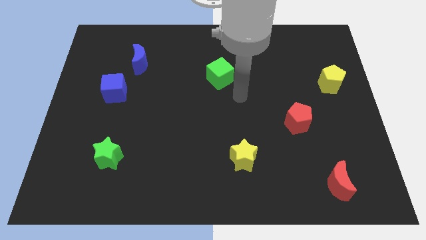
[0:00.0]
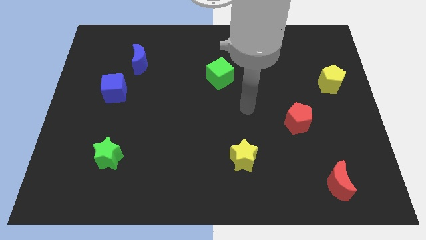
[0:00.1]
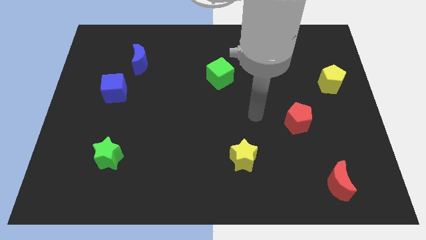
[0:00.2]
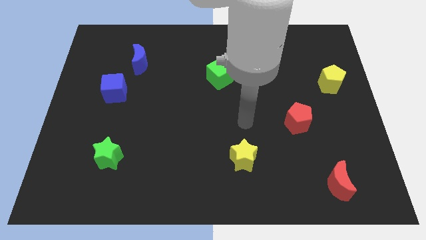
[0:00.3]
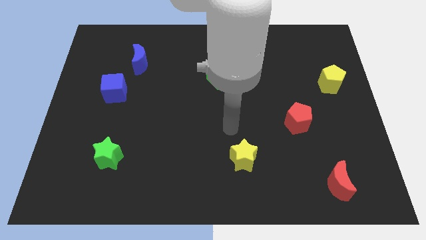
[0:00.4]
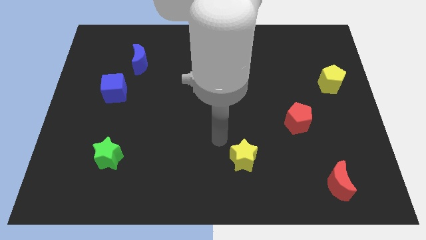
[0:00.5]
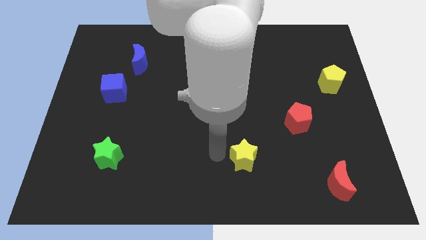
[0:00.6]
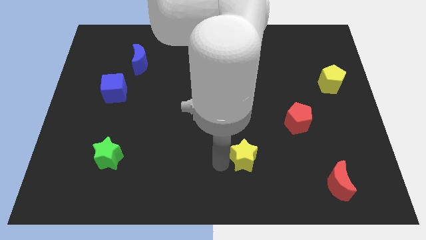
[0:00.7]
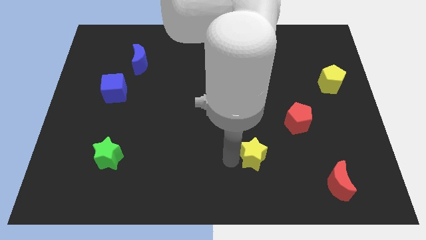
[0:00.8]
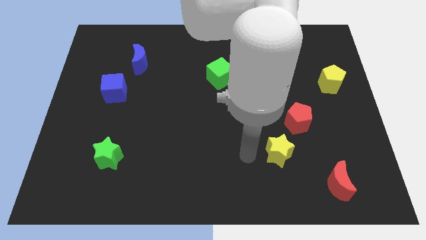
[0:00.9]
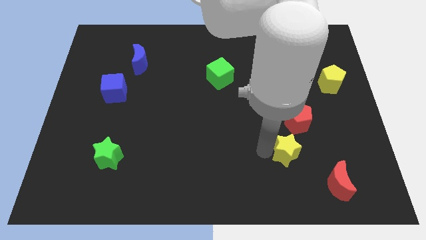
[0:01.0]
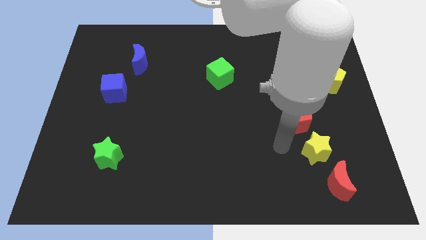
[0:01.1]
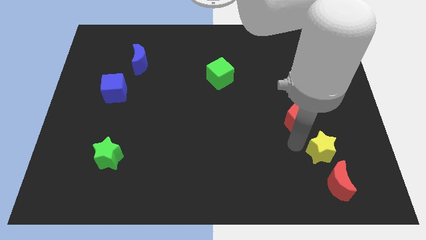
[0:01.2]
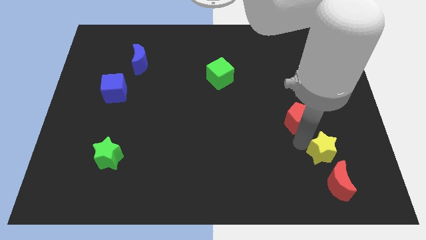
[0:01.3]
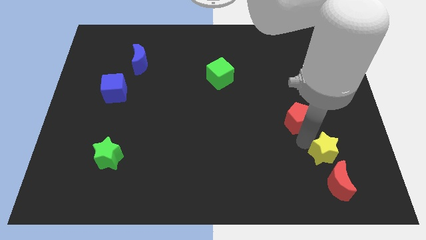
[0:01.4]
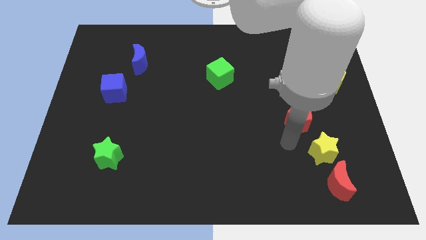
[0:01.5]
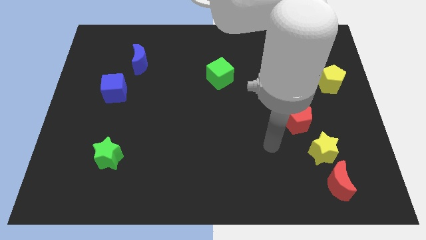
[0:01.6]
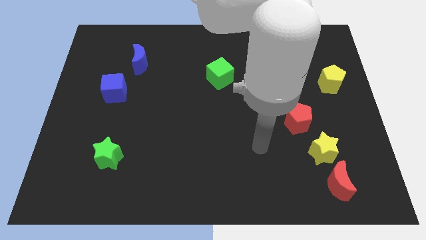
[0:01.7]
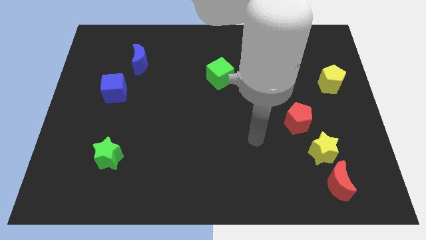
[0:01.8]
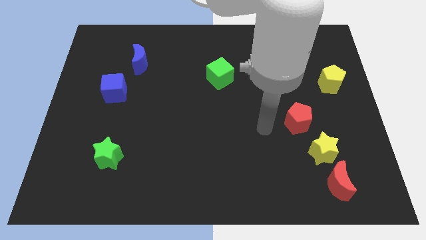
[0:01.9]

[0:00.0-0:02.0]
move the yellow star between red blocks

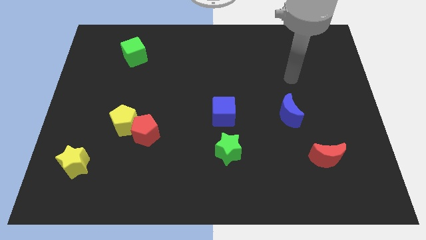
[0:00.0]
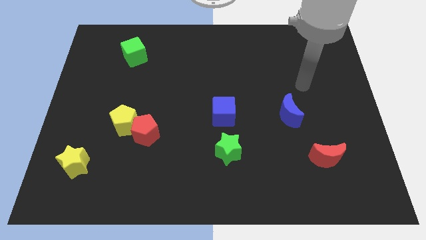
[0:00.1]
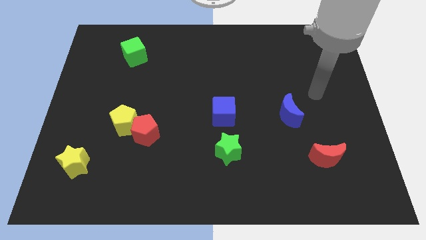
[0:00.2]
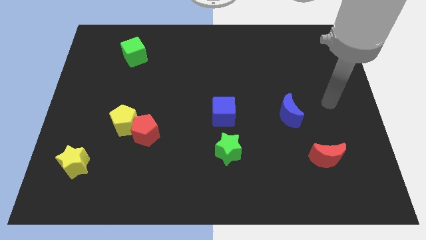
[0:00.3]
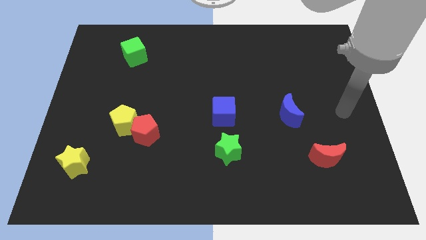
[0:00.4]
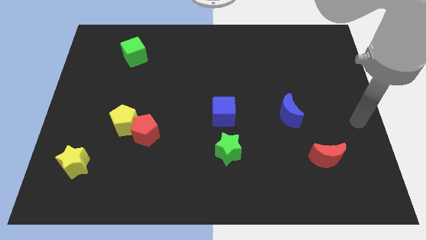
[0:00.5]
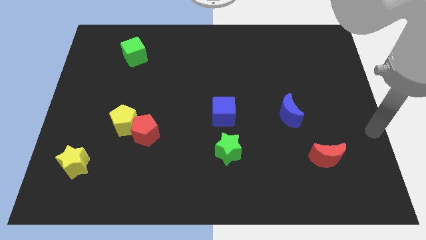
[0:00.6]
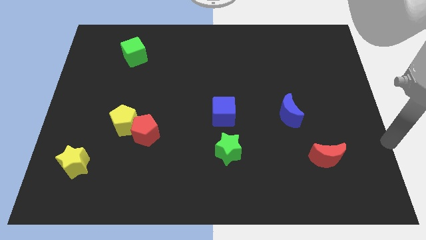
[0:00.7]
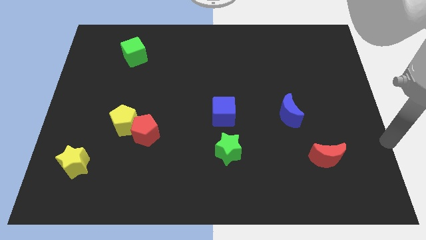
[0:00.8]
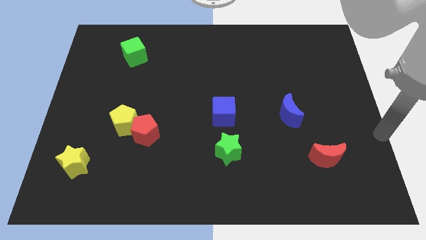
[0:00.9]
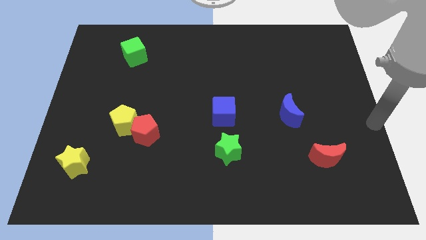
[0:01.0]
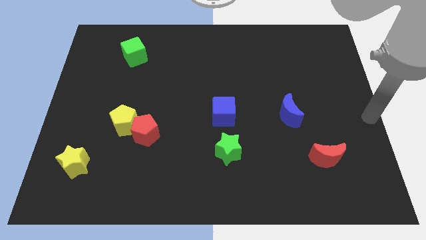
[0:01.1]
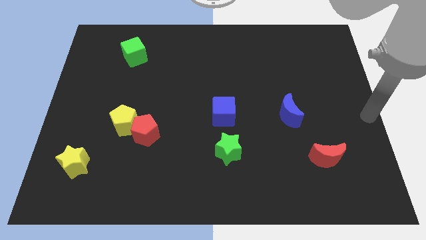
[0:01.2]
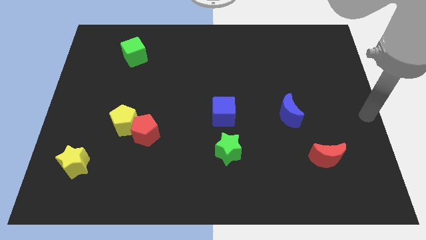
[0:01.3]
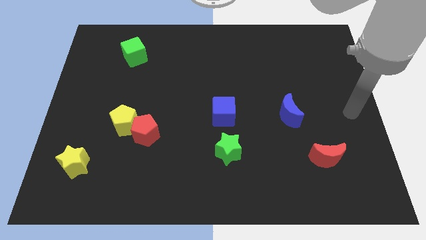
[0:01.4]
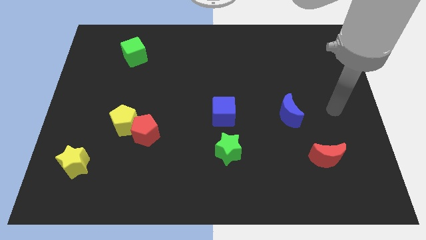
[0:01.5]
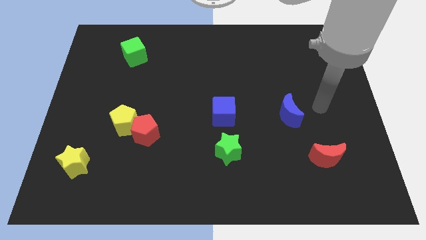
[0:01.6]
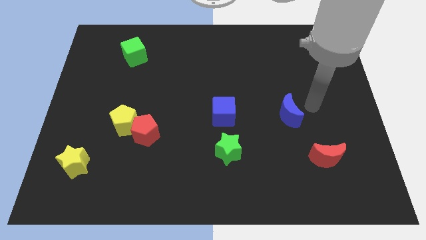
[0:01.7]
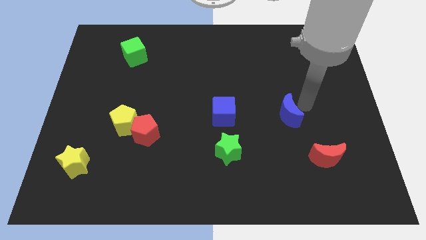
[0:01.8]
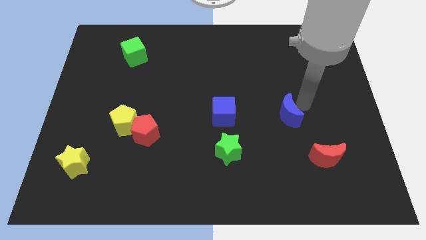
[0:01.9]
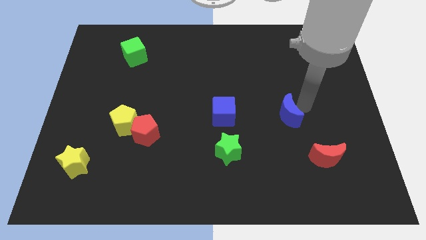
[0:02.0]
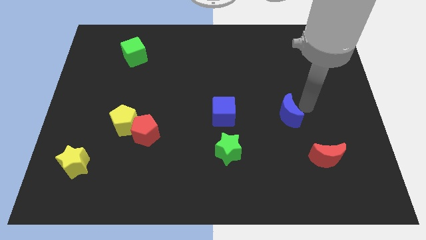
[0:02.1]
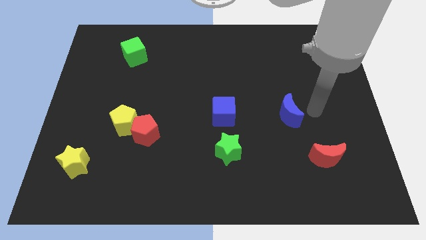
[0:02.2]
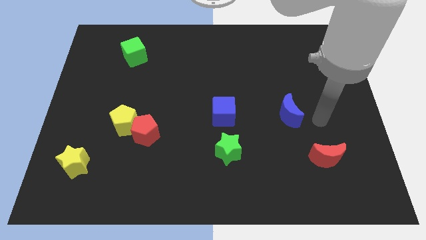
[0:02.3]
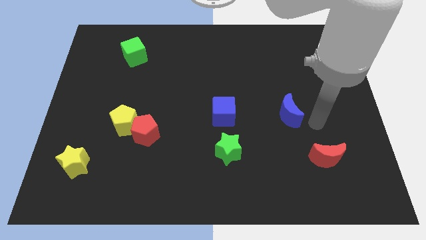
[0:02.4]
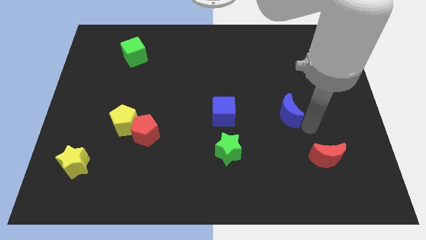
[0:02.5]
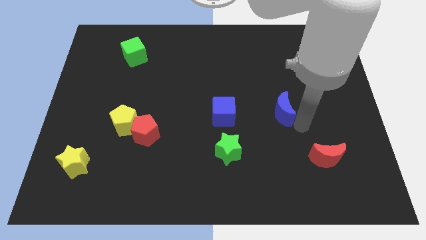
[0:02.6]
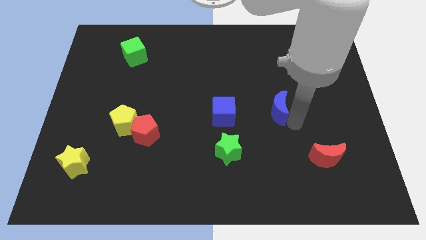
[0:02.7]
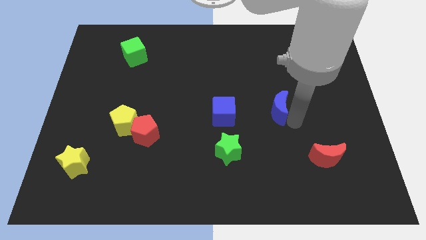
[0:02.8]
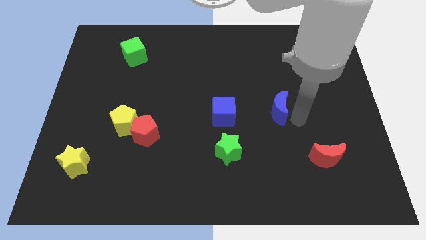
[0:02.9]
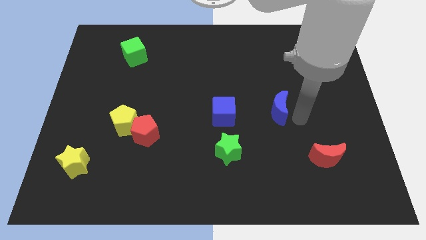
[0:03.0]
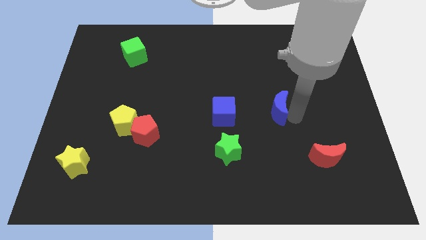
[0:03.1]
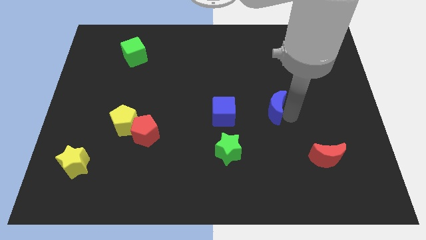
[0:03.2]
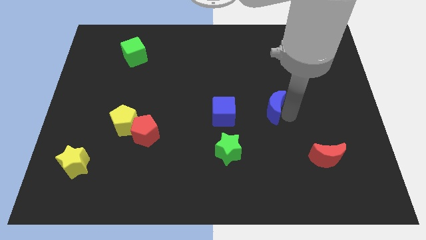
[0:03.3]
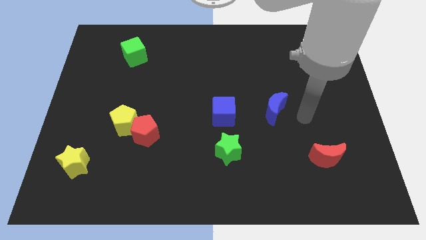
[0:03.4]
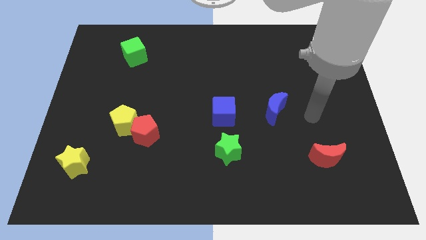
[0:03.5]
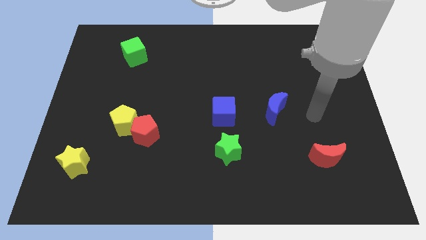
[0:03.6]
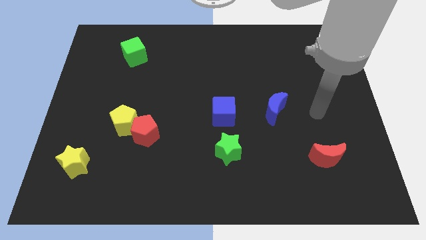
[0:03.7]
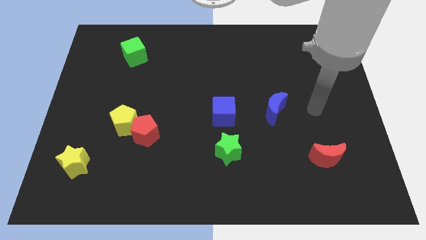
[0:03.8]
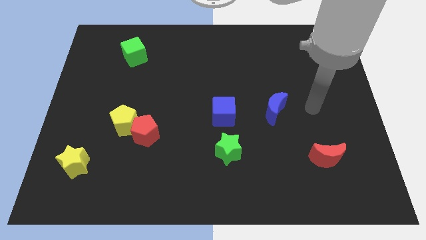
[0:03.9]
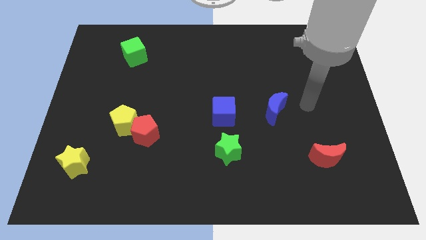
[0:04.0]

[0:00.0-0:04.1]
slide the blue crescent slightly to the left

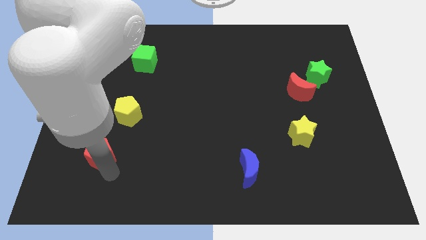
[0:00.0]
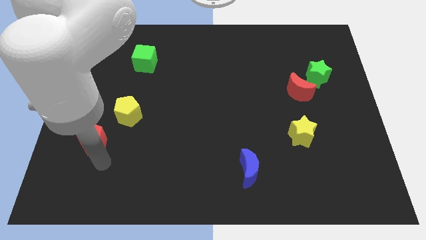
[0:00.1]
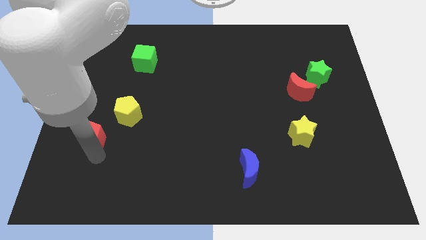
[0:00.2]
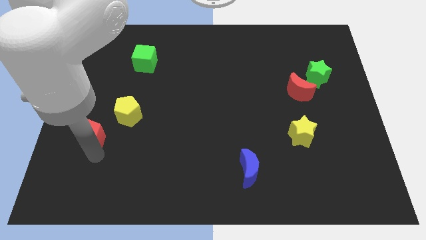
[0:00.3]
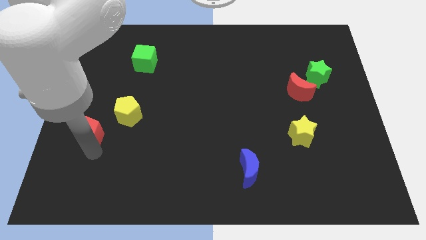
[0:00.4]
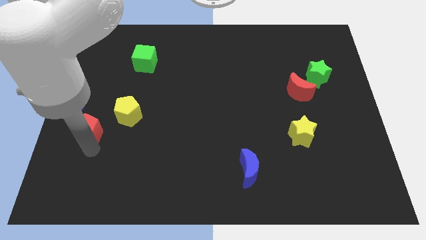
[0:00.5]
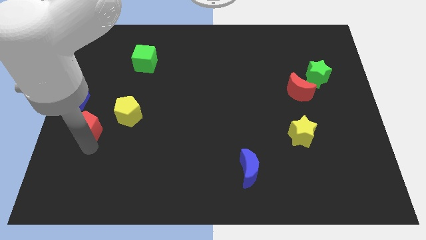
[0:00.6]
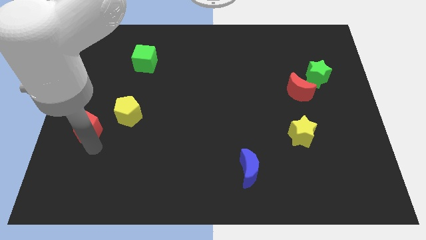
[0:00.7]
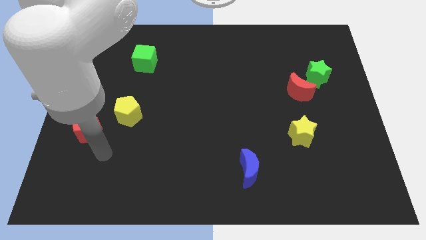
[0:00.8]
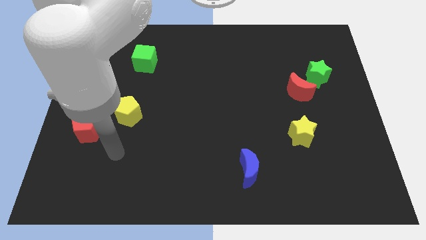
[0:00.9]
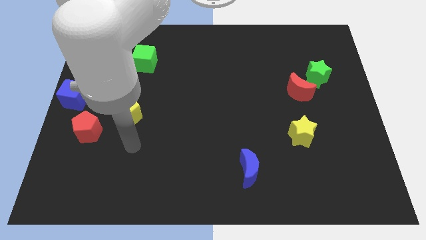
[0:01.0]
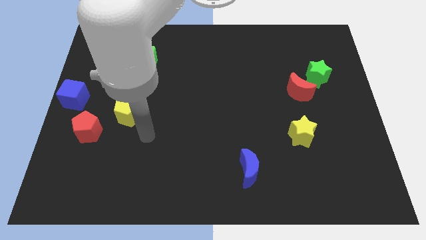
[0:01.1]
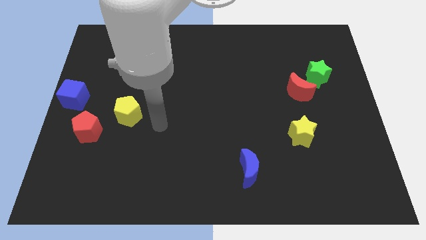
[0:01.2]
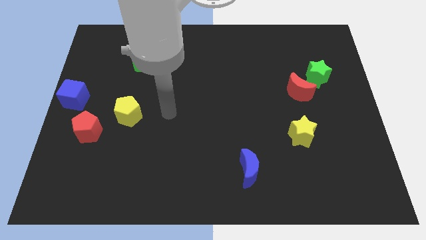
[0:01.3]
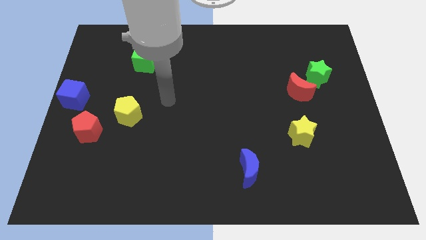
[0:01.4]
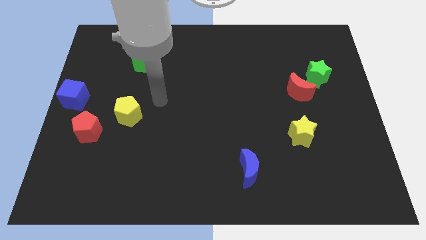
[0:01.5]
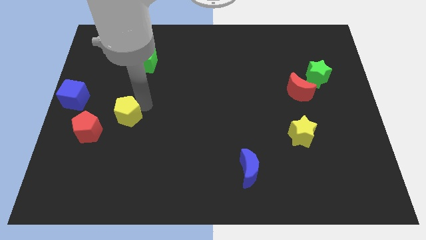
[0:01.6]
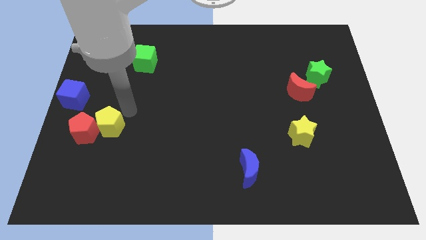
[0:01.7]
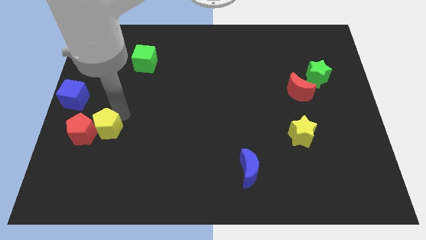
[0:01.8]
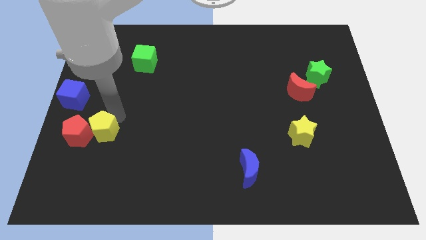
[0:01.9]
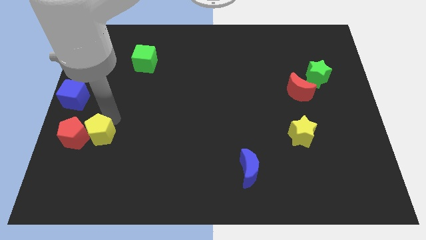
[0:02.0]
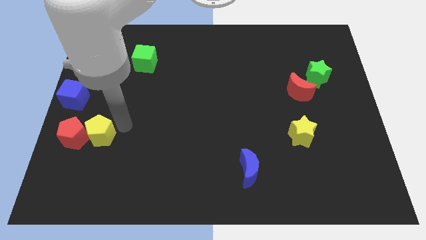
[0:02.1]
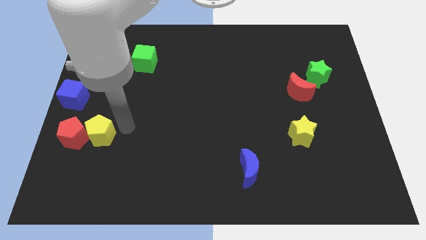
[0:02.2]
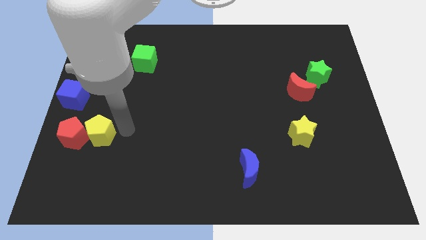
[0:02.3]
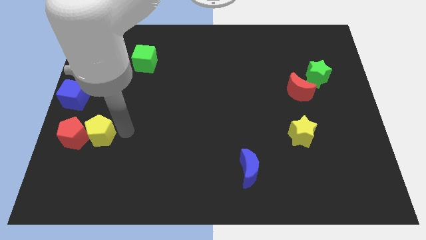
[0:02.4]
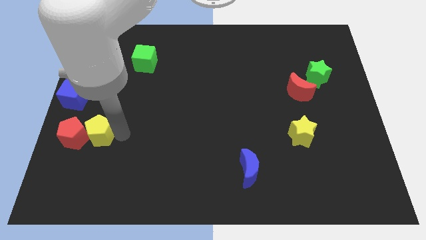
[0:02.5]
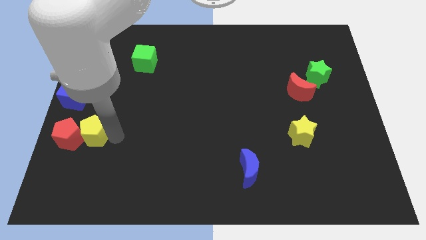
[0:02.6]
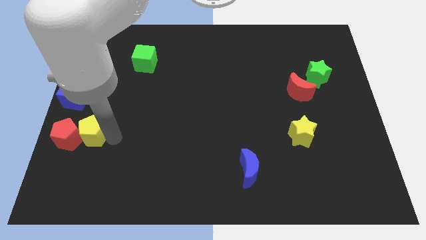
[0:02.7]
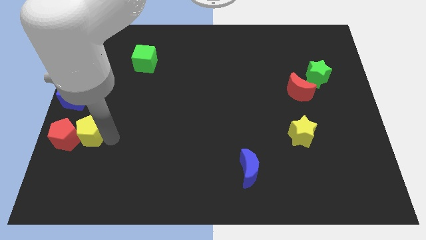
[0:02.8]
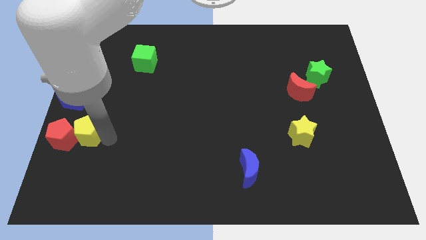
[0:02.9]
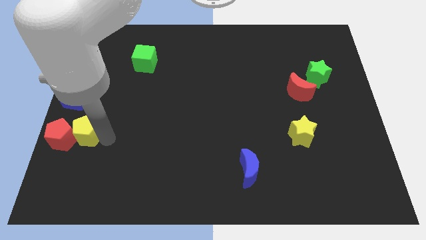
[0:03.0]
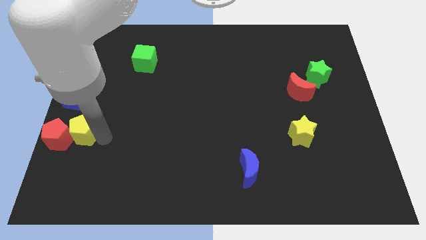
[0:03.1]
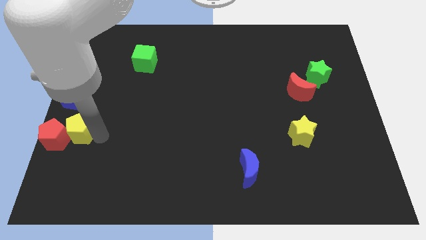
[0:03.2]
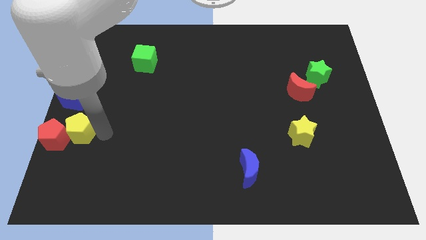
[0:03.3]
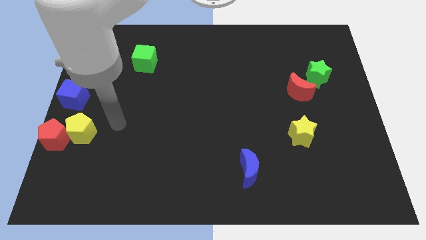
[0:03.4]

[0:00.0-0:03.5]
place the pentagons together below the blue cube
